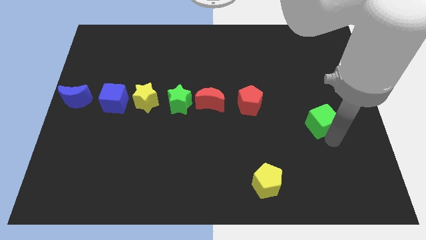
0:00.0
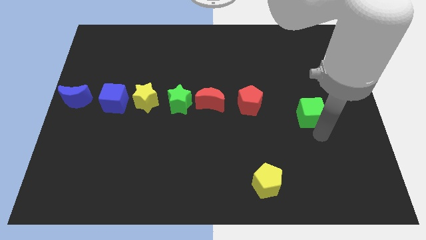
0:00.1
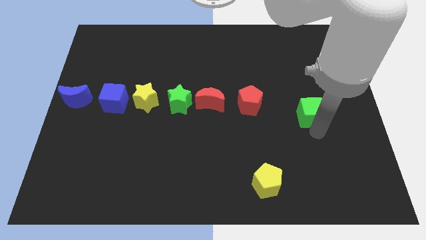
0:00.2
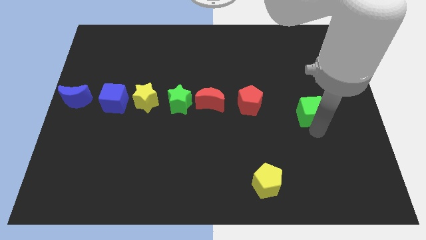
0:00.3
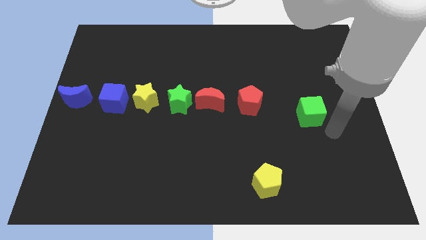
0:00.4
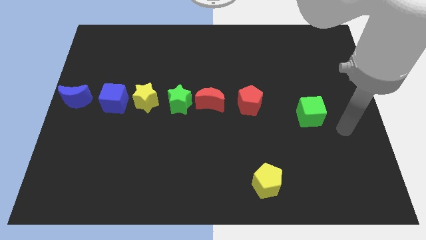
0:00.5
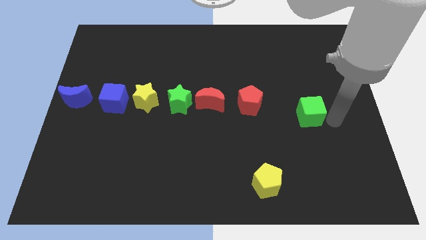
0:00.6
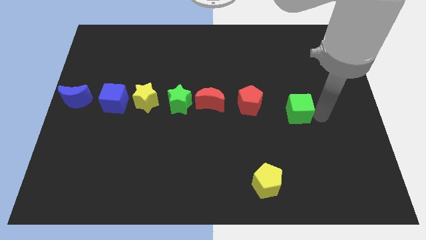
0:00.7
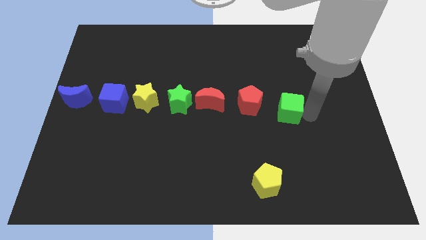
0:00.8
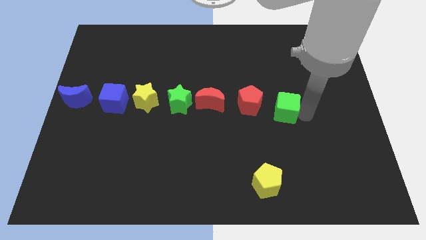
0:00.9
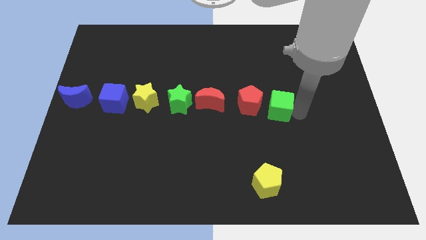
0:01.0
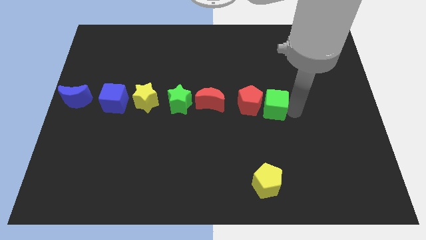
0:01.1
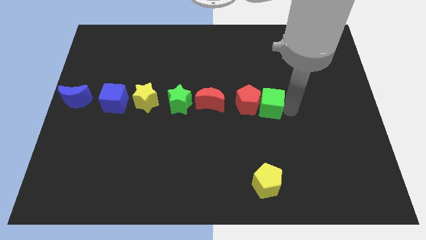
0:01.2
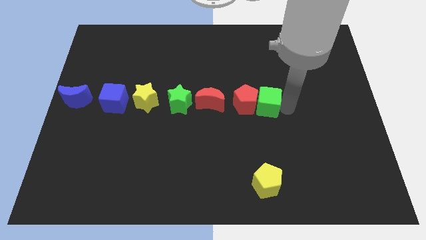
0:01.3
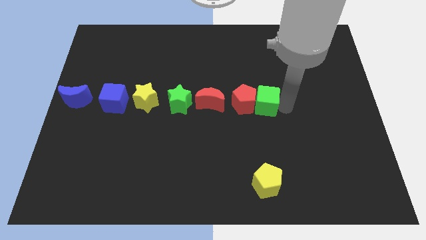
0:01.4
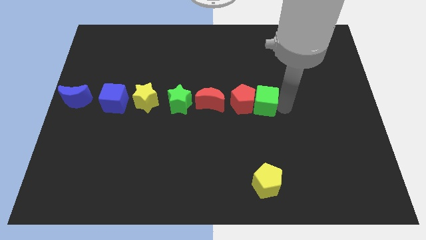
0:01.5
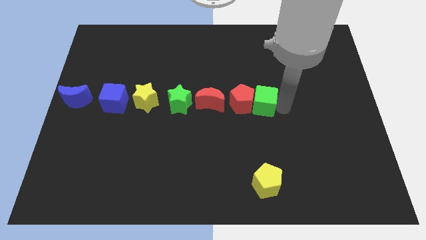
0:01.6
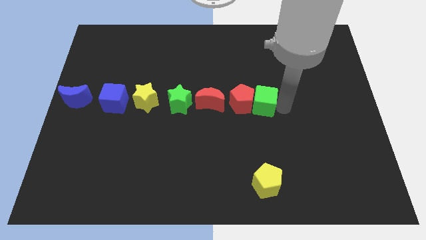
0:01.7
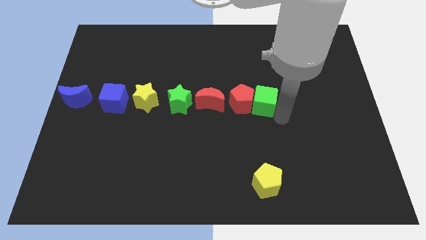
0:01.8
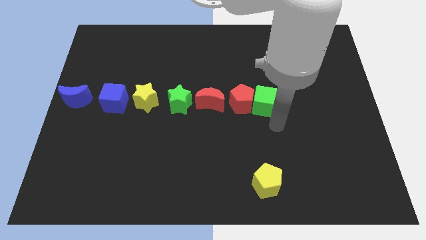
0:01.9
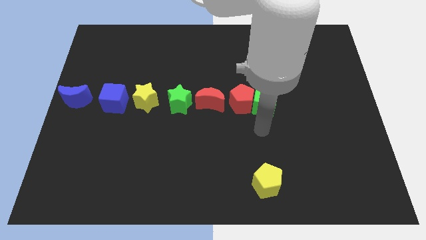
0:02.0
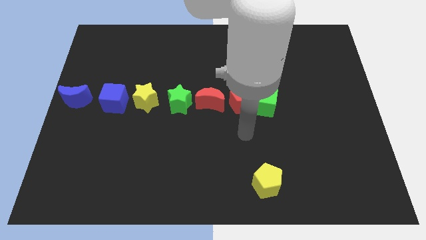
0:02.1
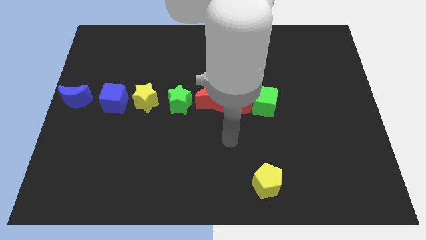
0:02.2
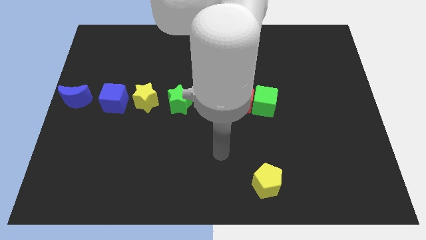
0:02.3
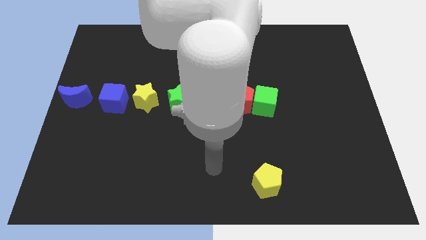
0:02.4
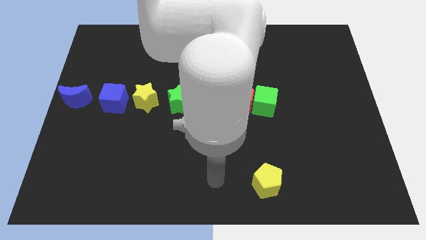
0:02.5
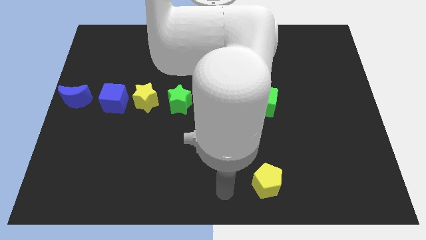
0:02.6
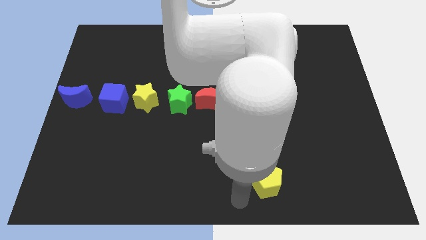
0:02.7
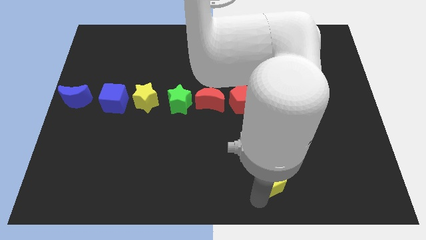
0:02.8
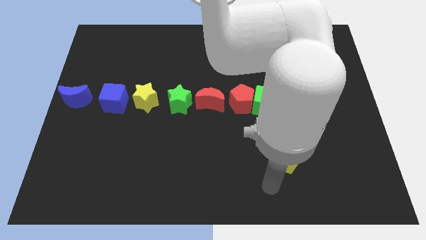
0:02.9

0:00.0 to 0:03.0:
push the green cube towards the red pentagon on the board

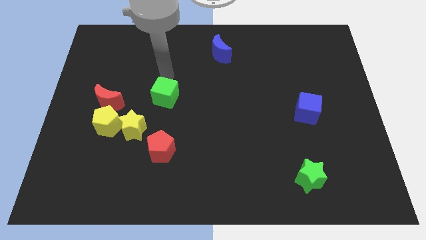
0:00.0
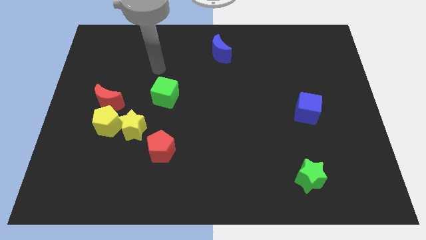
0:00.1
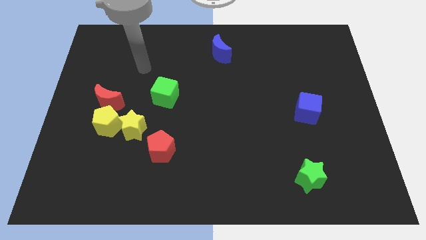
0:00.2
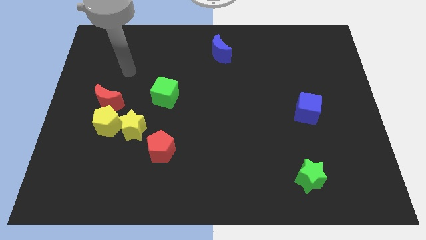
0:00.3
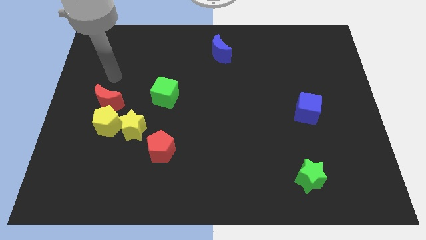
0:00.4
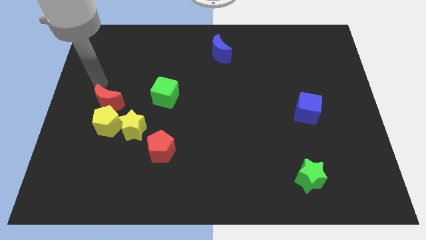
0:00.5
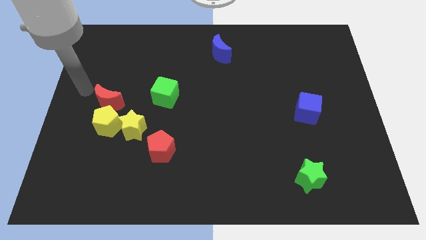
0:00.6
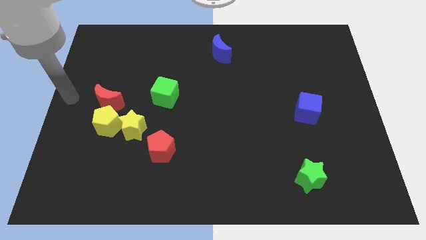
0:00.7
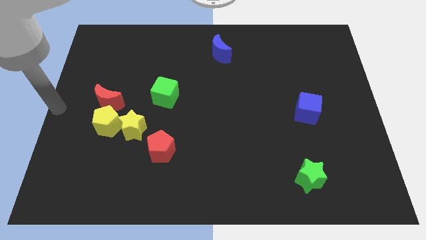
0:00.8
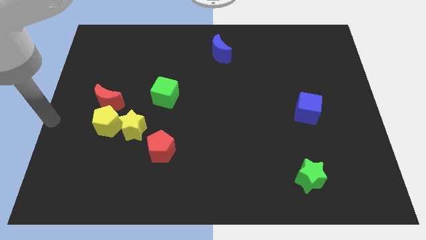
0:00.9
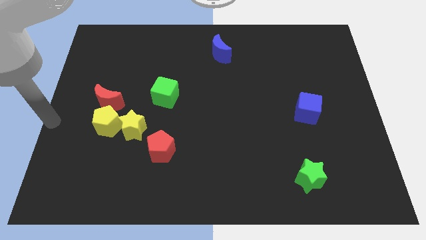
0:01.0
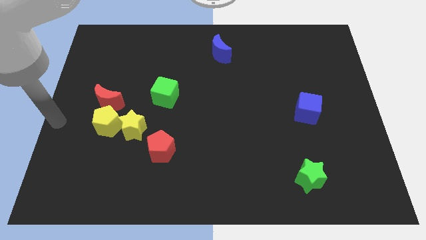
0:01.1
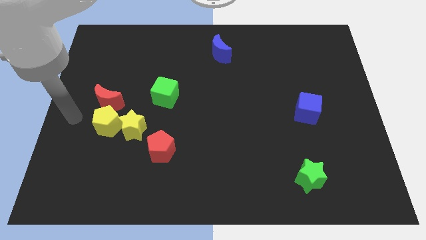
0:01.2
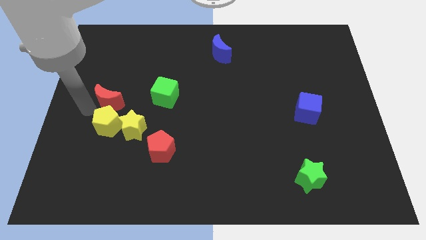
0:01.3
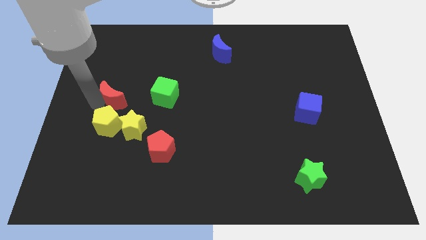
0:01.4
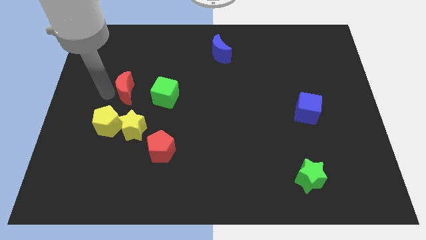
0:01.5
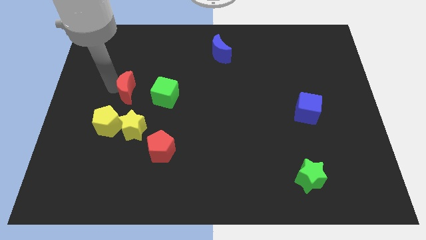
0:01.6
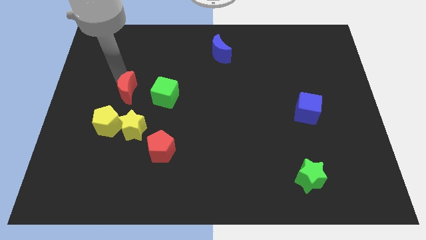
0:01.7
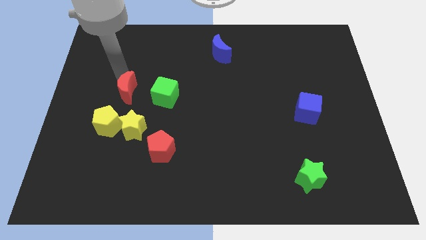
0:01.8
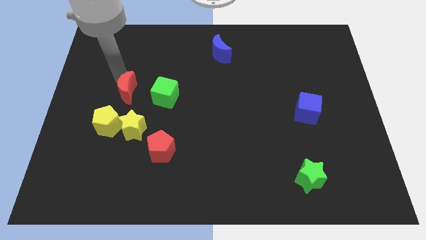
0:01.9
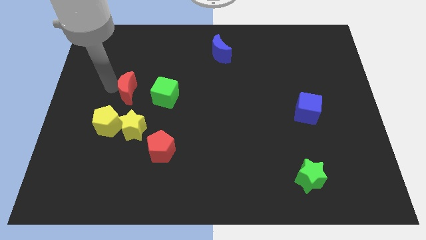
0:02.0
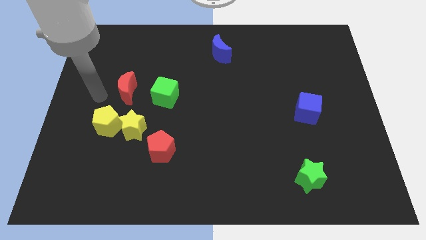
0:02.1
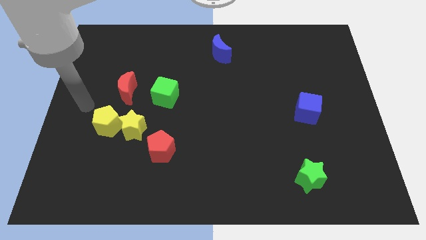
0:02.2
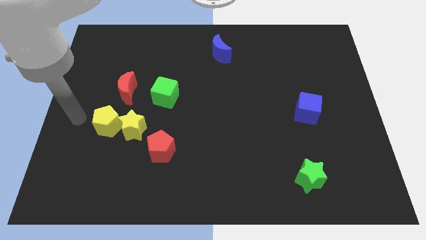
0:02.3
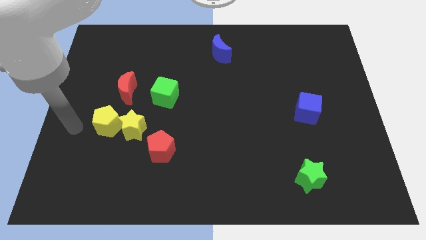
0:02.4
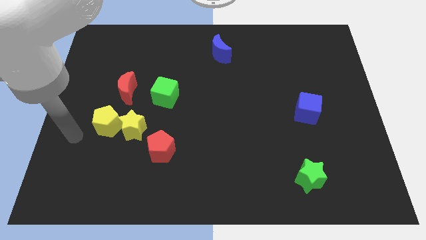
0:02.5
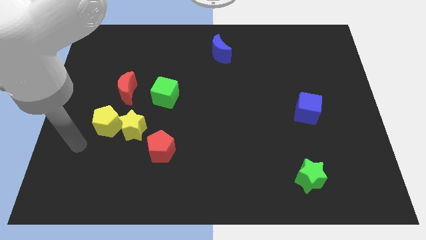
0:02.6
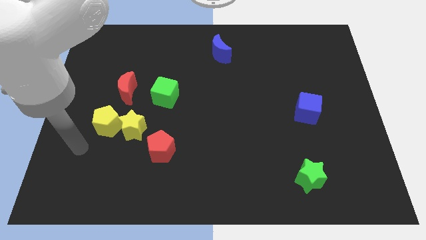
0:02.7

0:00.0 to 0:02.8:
move the red moon to the left side of the green cube

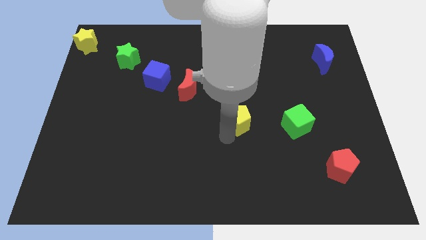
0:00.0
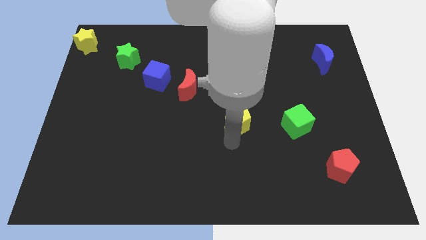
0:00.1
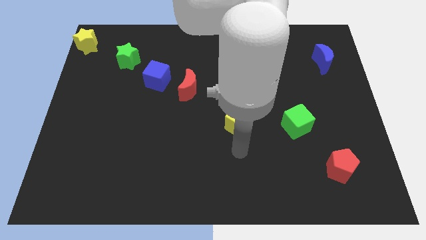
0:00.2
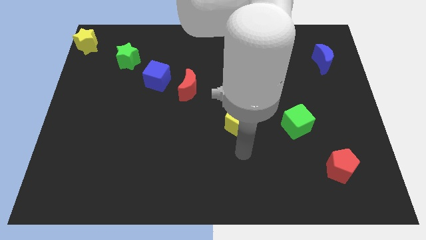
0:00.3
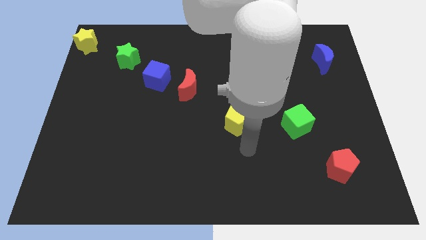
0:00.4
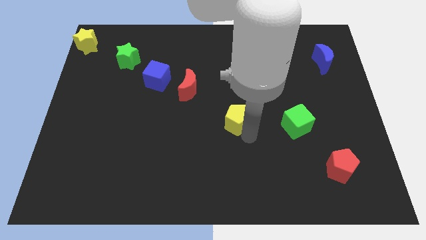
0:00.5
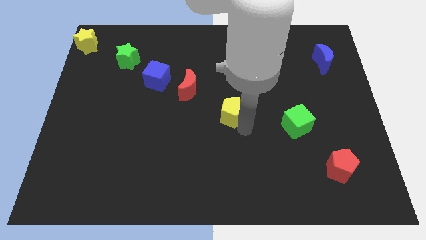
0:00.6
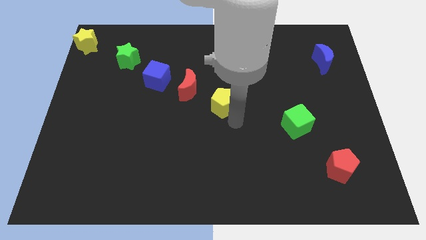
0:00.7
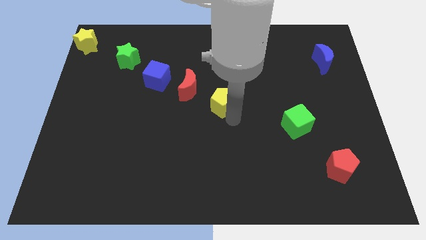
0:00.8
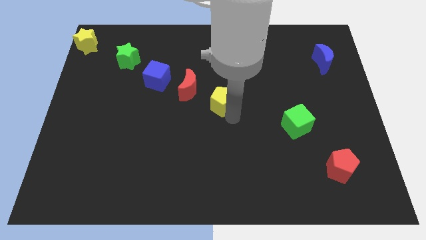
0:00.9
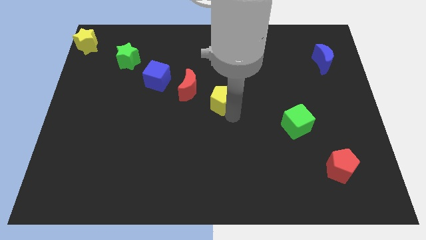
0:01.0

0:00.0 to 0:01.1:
slide yellow pentagon below red crescent

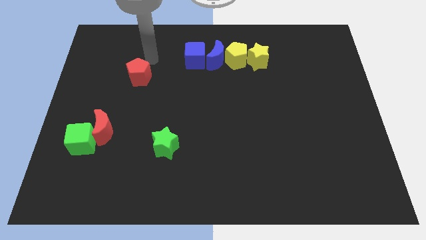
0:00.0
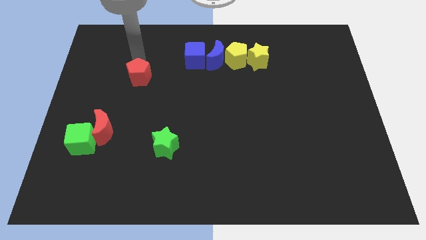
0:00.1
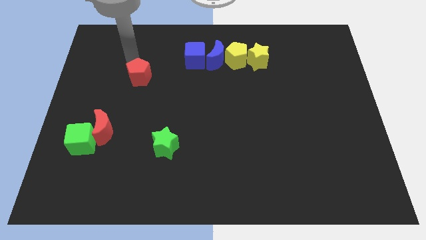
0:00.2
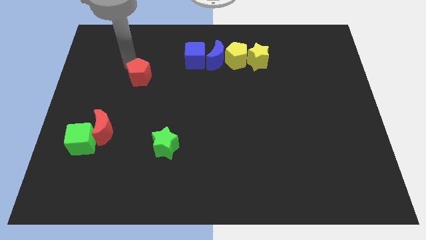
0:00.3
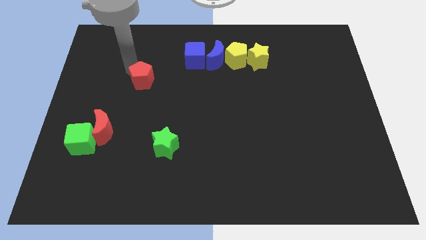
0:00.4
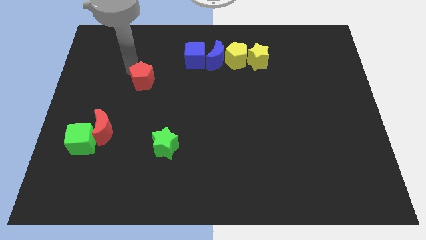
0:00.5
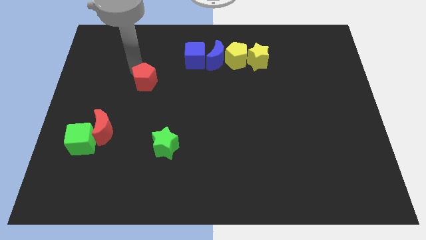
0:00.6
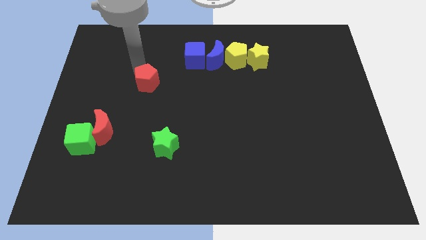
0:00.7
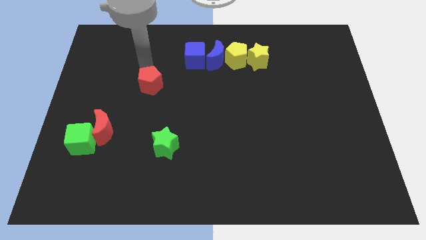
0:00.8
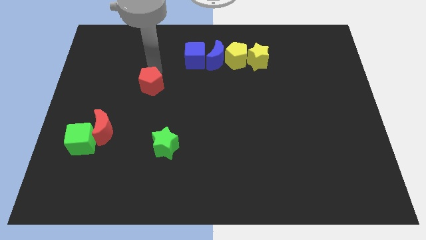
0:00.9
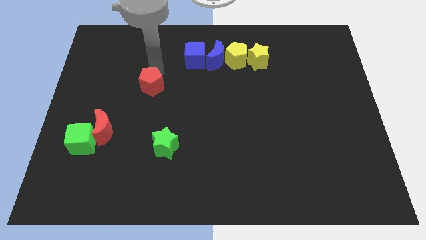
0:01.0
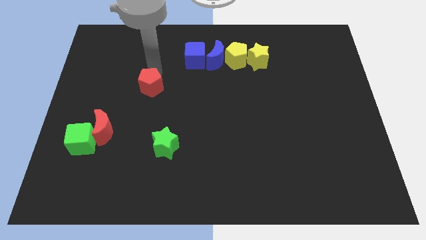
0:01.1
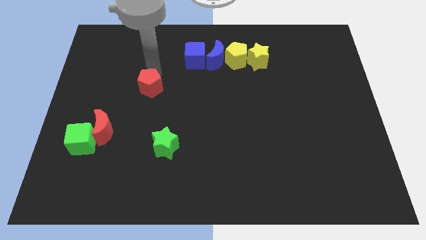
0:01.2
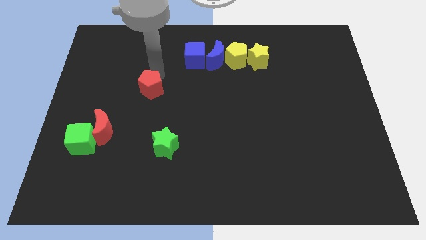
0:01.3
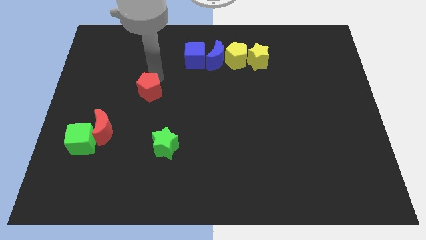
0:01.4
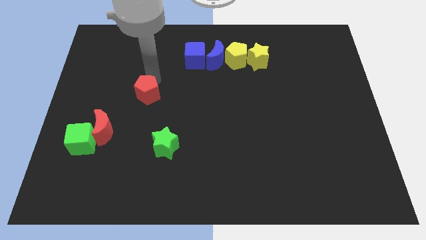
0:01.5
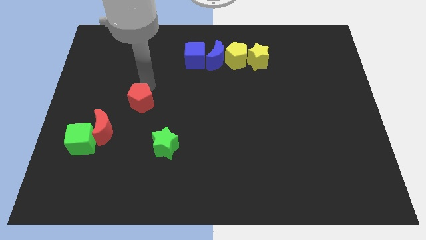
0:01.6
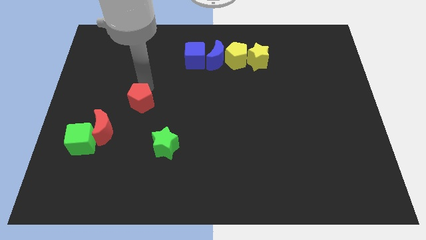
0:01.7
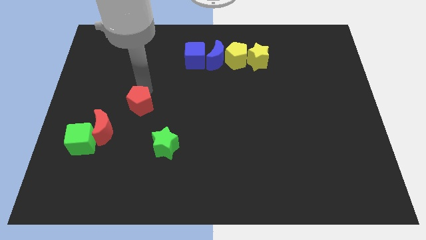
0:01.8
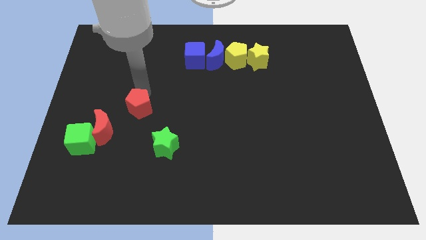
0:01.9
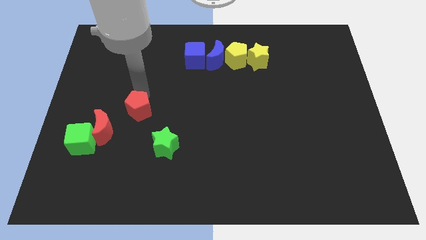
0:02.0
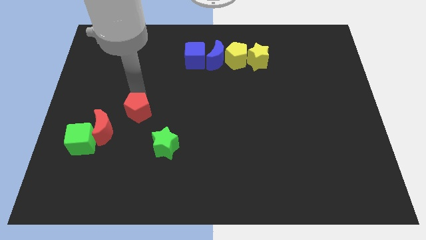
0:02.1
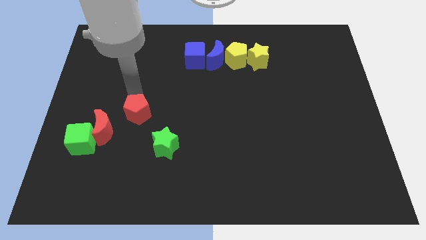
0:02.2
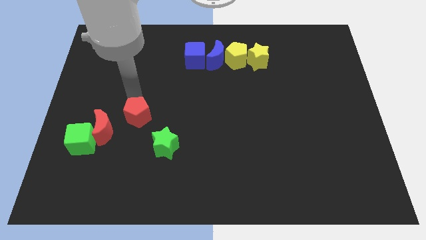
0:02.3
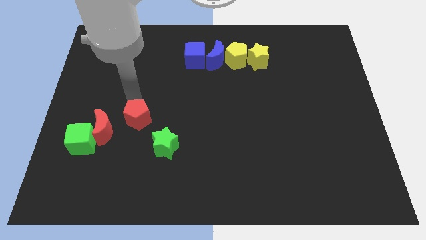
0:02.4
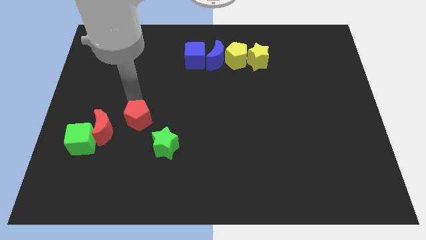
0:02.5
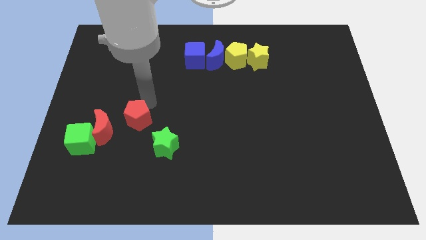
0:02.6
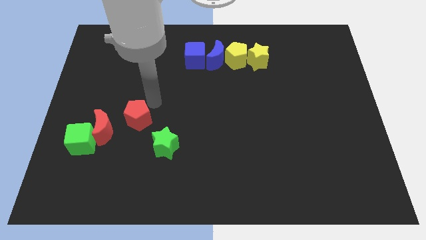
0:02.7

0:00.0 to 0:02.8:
push the red pentagon downward
